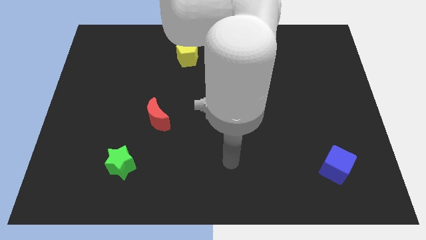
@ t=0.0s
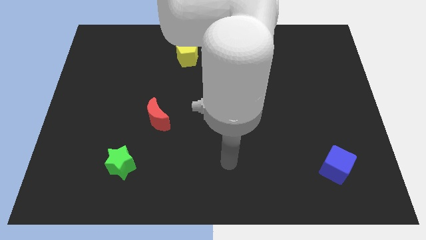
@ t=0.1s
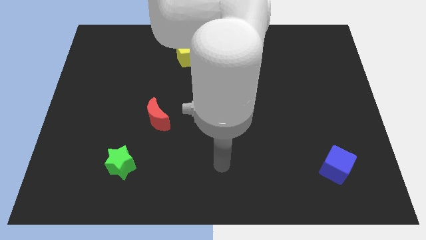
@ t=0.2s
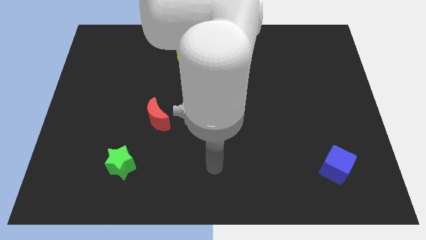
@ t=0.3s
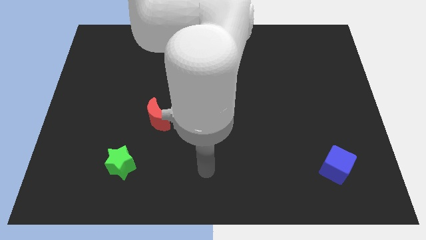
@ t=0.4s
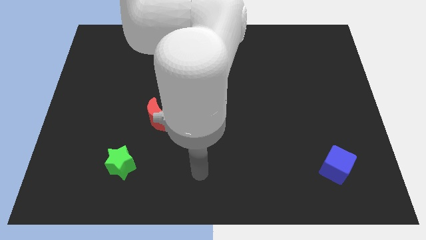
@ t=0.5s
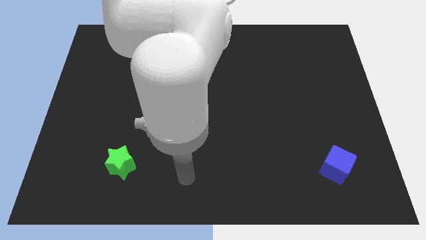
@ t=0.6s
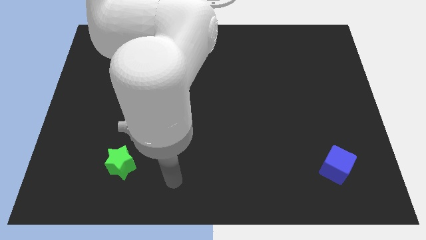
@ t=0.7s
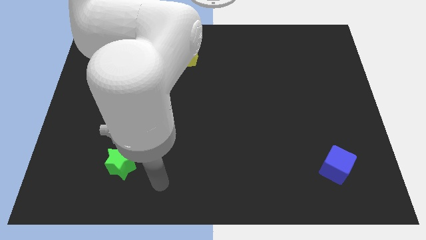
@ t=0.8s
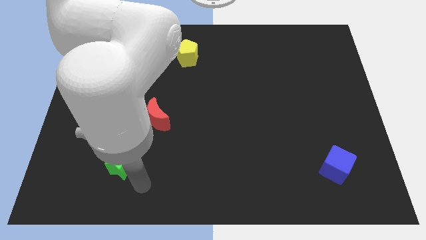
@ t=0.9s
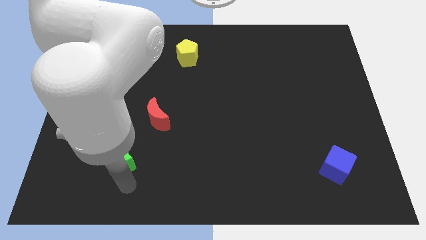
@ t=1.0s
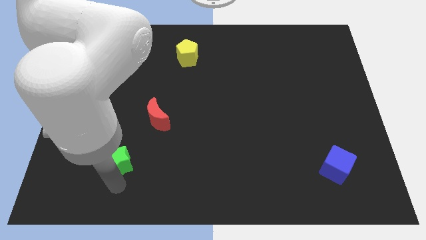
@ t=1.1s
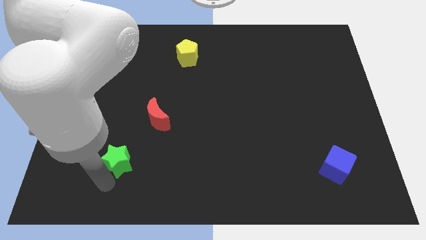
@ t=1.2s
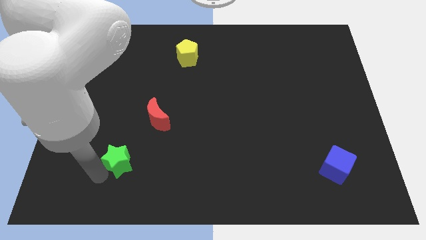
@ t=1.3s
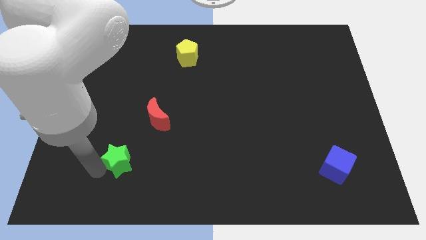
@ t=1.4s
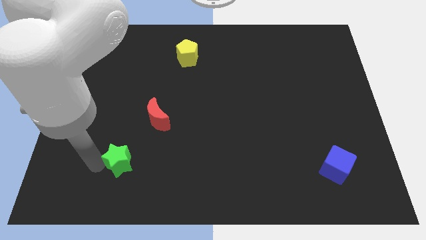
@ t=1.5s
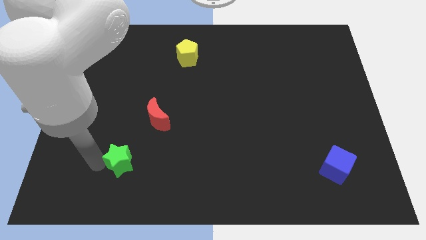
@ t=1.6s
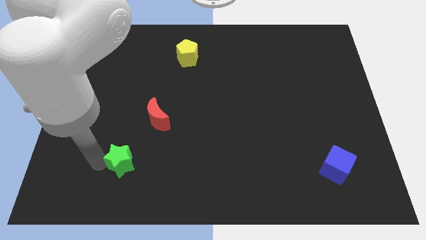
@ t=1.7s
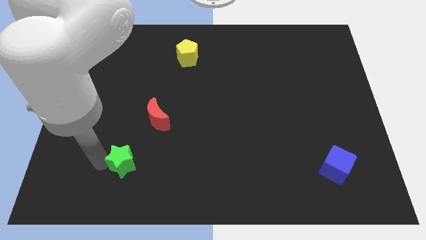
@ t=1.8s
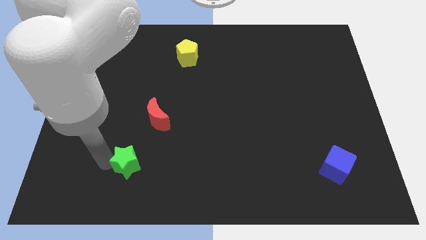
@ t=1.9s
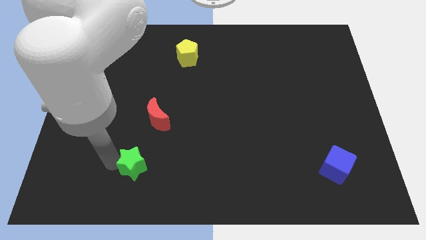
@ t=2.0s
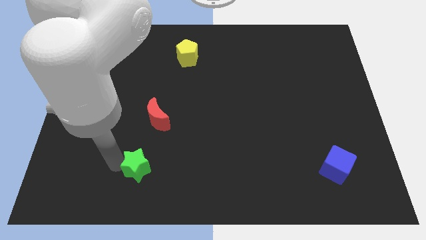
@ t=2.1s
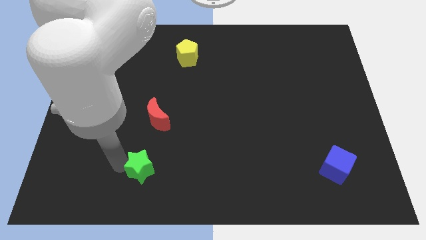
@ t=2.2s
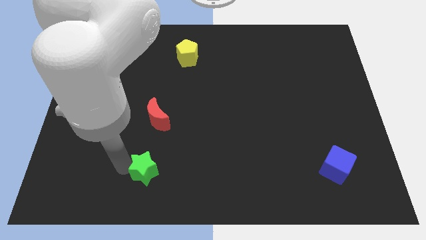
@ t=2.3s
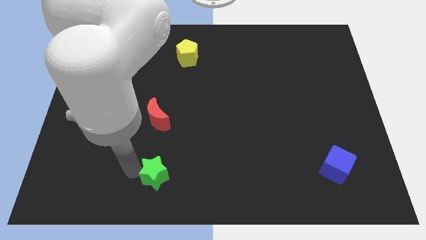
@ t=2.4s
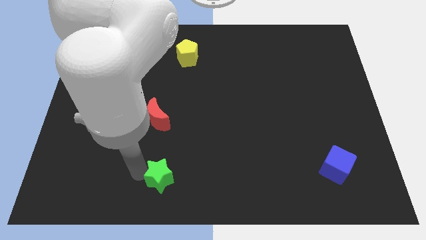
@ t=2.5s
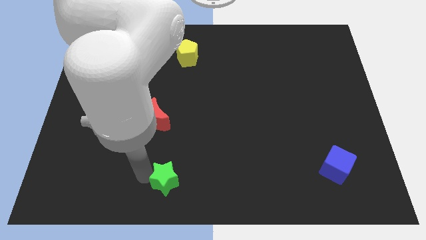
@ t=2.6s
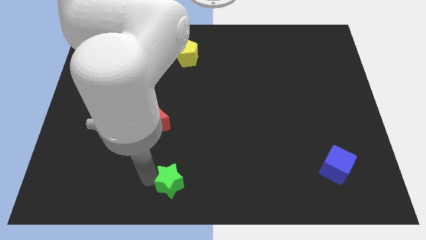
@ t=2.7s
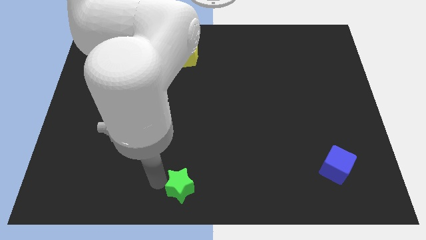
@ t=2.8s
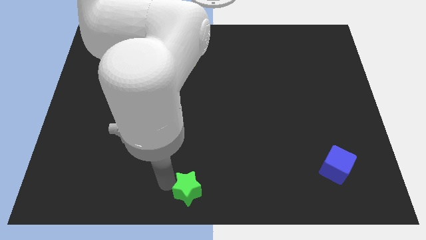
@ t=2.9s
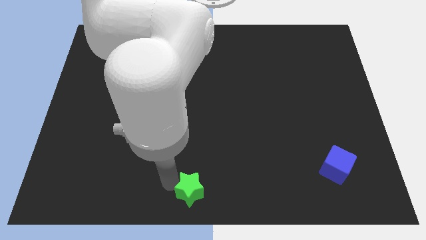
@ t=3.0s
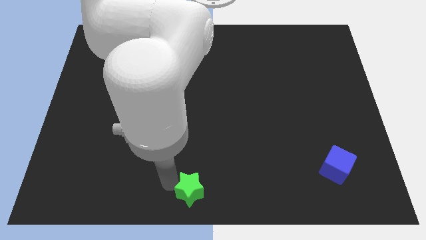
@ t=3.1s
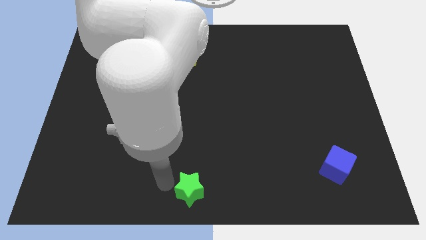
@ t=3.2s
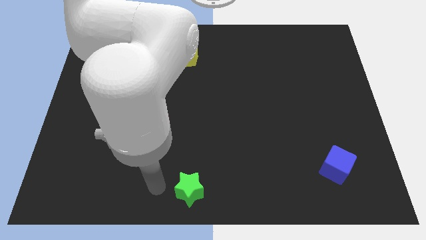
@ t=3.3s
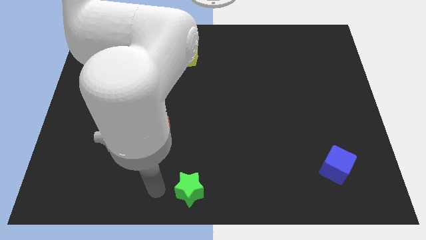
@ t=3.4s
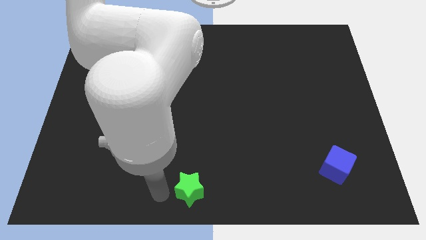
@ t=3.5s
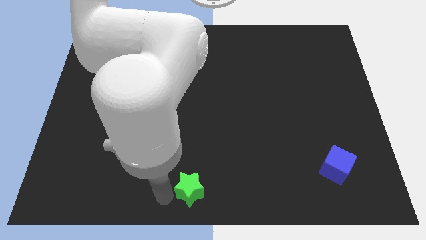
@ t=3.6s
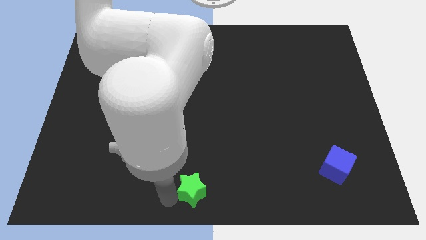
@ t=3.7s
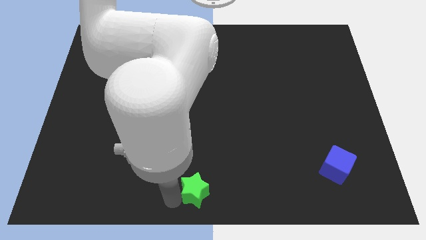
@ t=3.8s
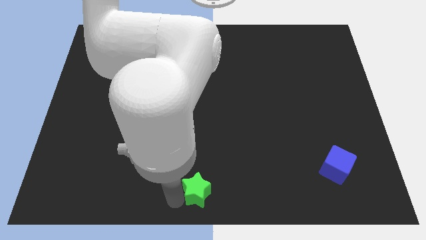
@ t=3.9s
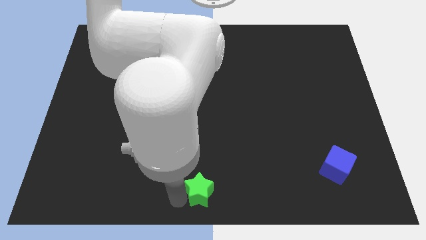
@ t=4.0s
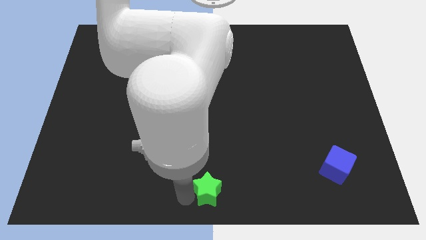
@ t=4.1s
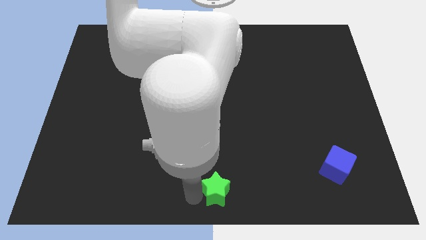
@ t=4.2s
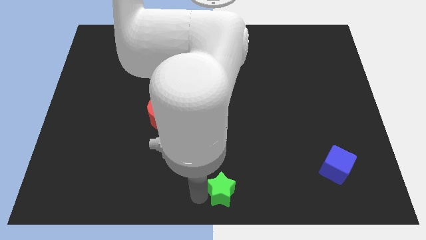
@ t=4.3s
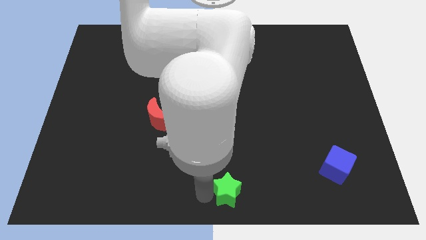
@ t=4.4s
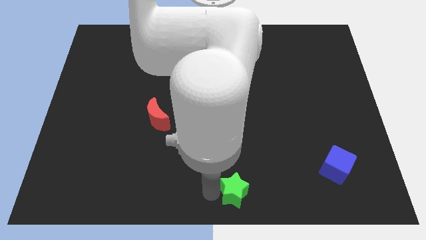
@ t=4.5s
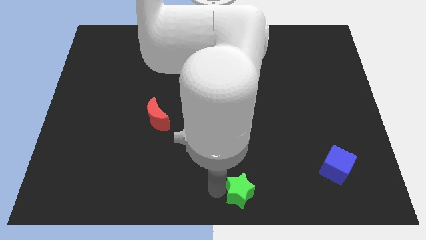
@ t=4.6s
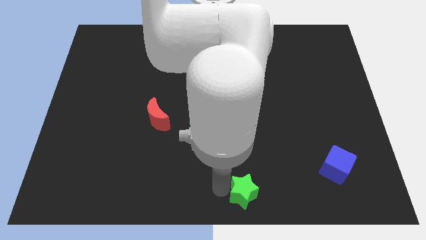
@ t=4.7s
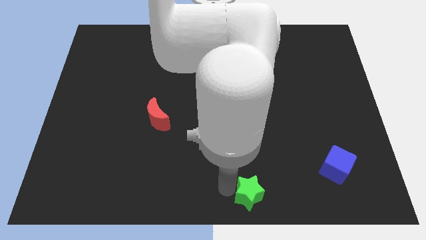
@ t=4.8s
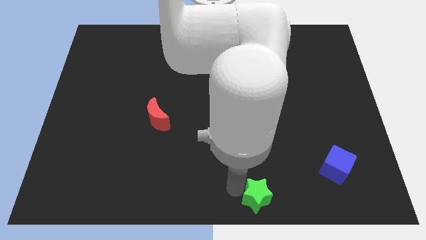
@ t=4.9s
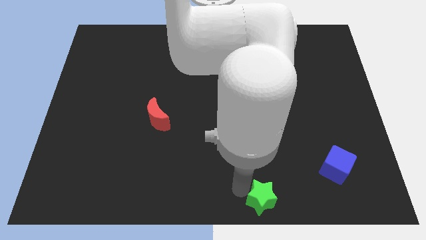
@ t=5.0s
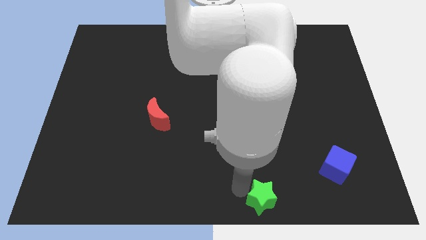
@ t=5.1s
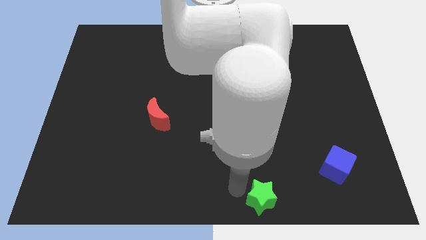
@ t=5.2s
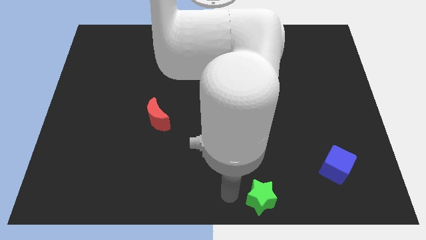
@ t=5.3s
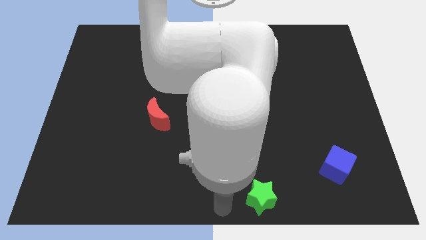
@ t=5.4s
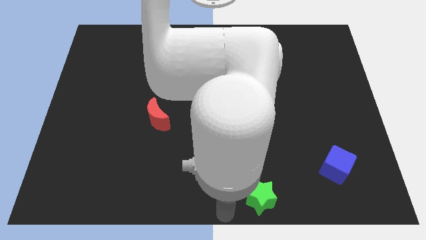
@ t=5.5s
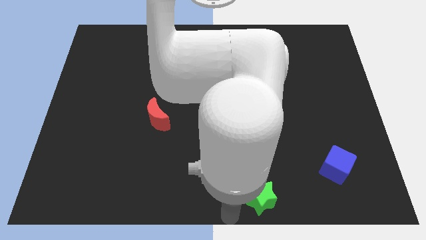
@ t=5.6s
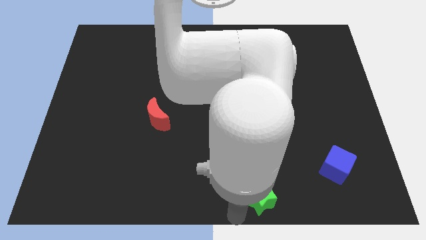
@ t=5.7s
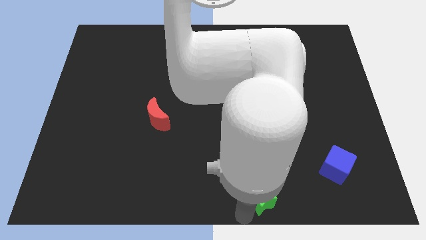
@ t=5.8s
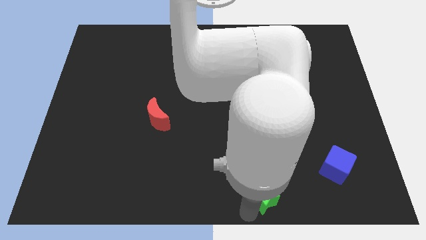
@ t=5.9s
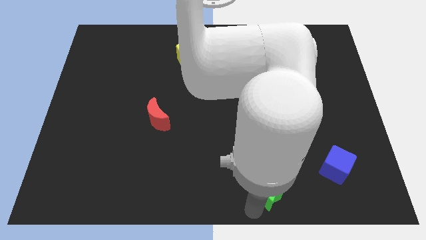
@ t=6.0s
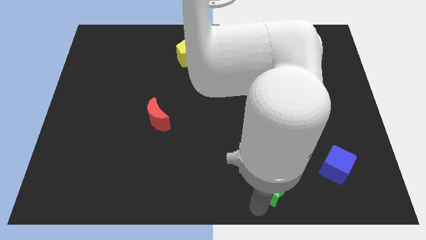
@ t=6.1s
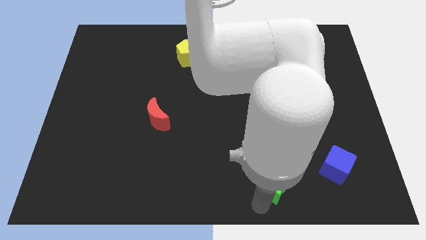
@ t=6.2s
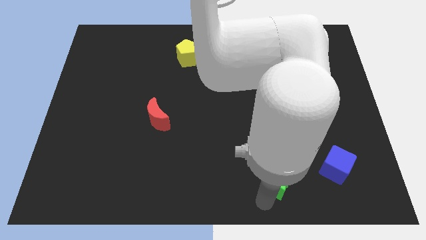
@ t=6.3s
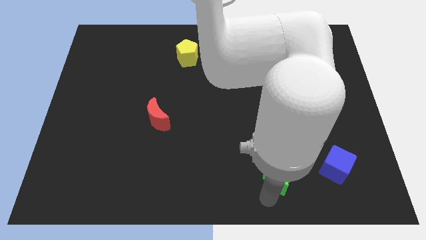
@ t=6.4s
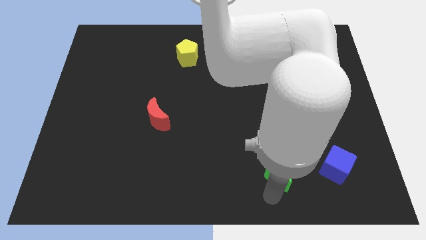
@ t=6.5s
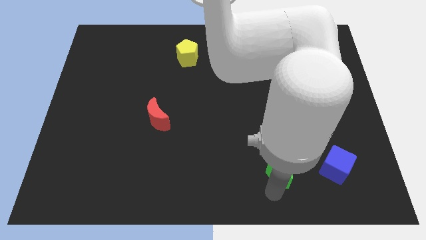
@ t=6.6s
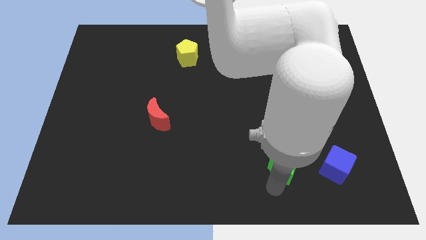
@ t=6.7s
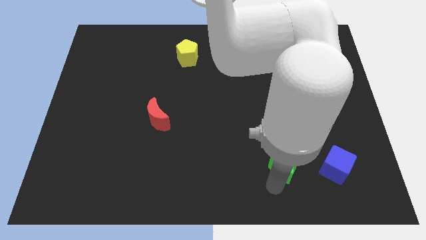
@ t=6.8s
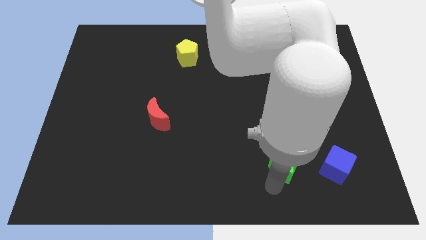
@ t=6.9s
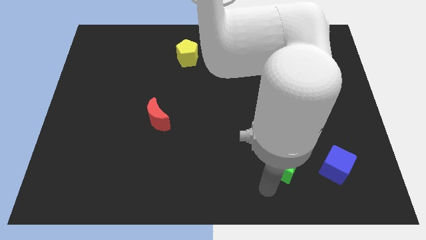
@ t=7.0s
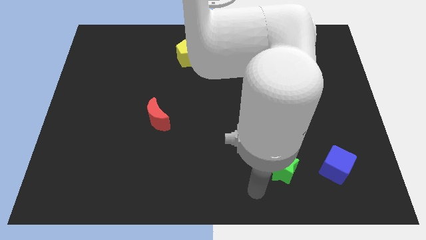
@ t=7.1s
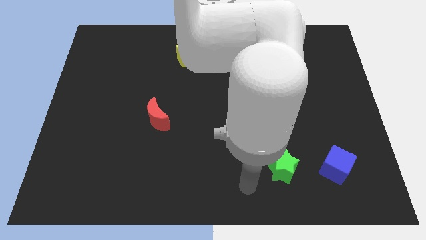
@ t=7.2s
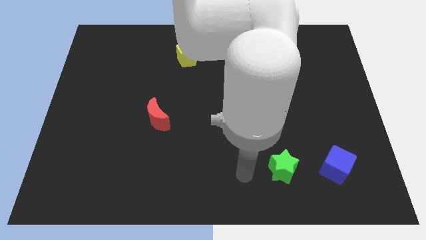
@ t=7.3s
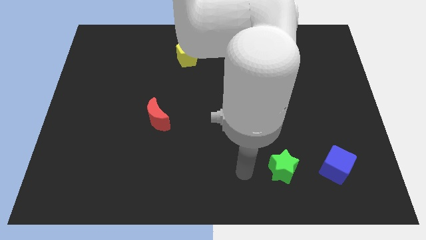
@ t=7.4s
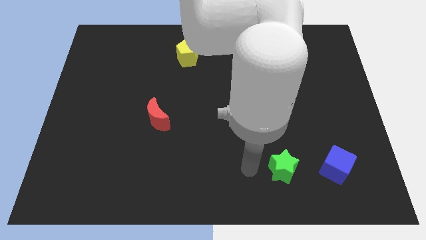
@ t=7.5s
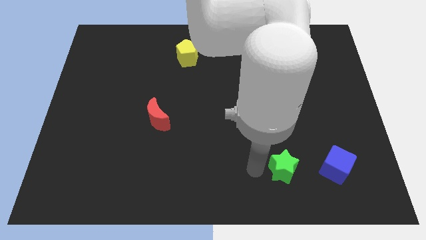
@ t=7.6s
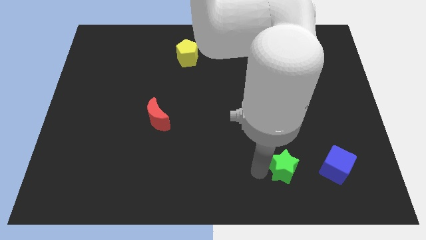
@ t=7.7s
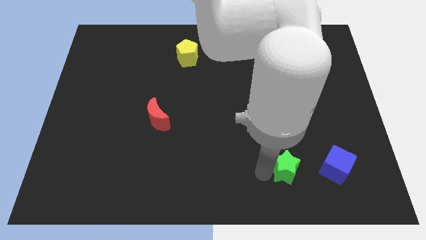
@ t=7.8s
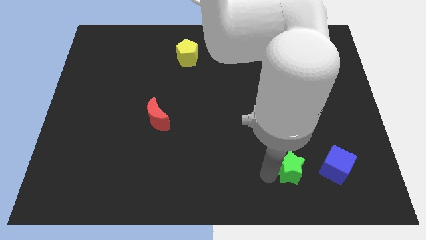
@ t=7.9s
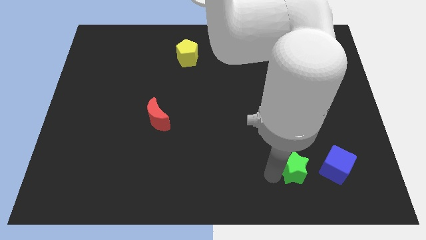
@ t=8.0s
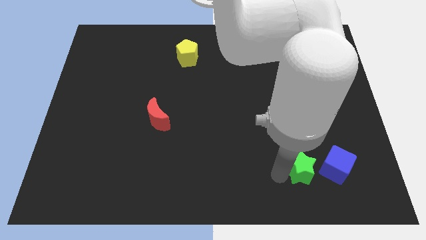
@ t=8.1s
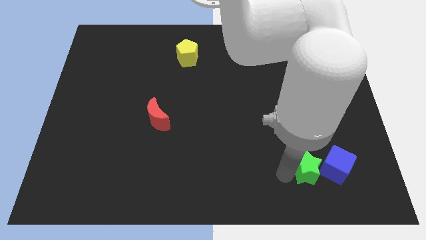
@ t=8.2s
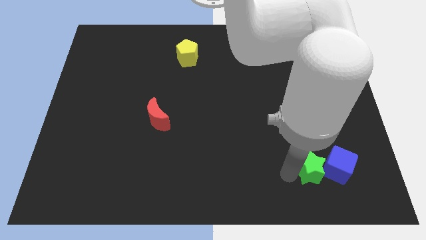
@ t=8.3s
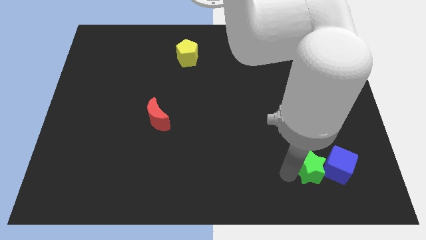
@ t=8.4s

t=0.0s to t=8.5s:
move the green star close to the blue block
